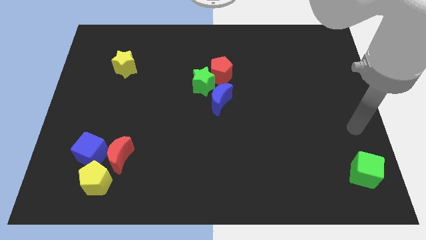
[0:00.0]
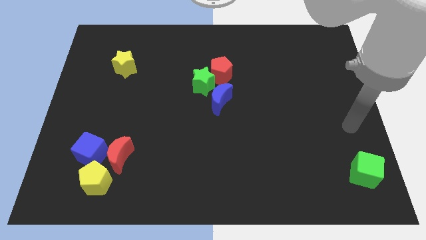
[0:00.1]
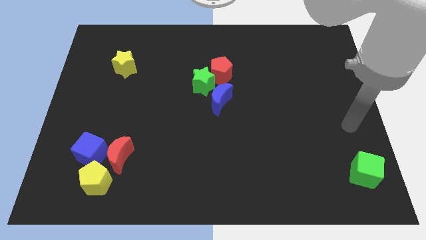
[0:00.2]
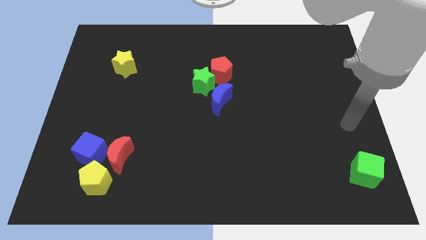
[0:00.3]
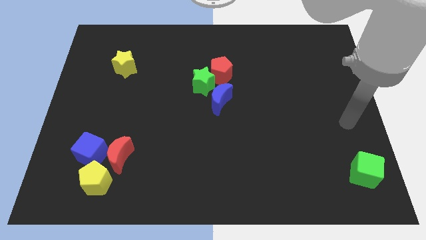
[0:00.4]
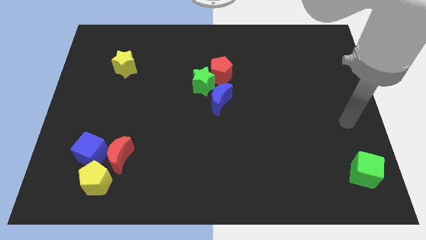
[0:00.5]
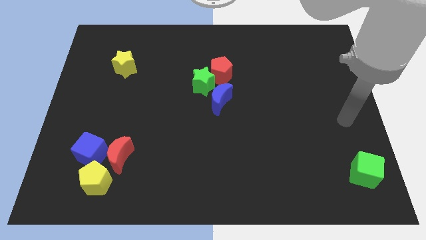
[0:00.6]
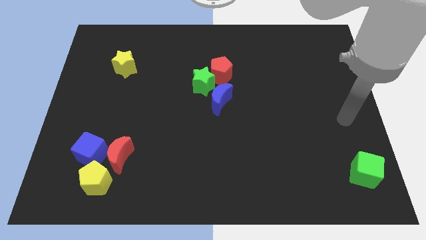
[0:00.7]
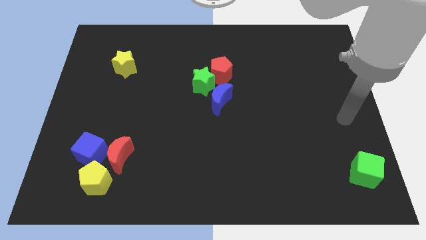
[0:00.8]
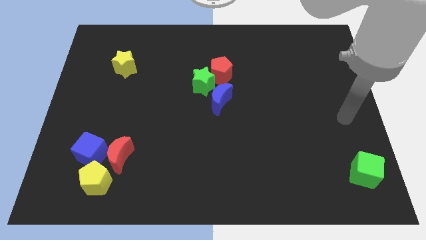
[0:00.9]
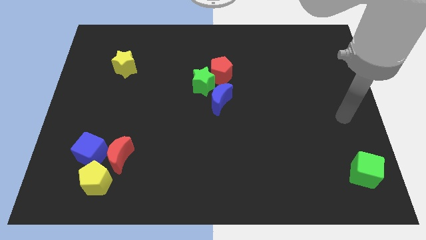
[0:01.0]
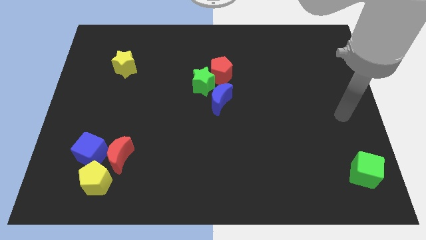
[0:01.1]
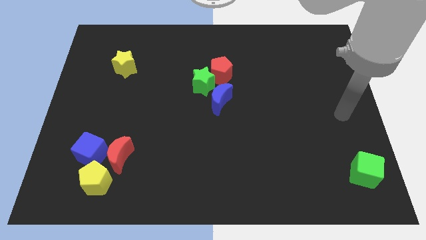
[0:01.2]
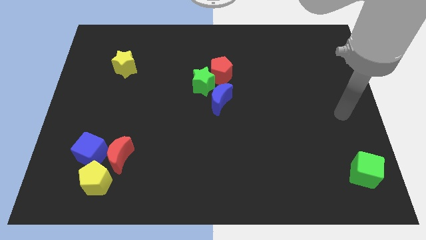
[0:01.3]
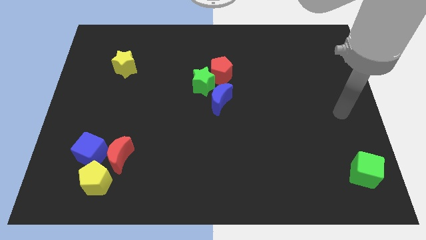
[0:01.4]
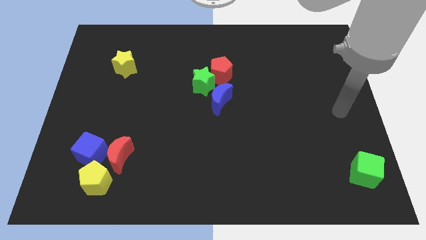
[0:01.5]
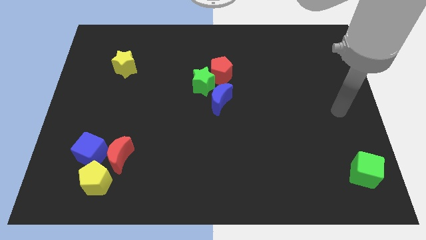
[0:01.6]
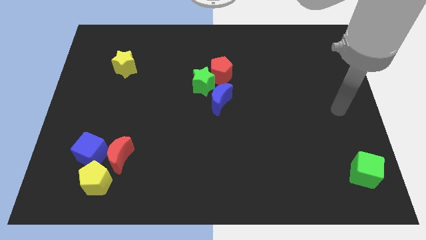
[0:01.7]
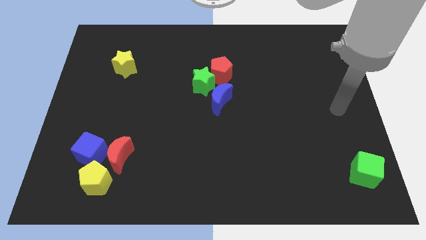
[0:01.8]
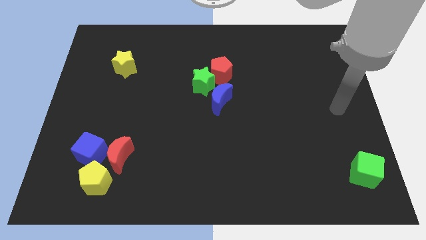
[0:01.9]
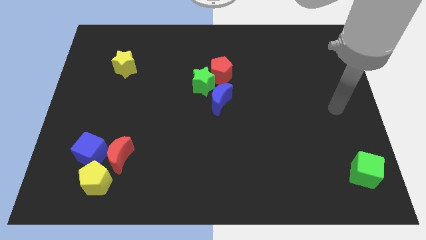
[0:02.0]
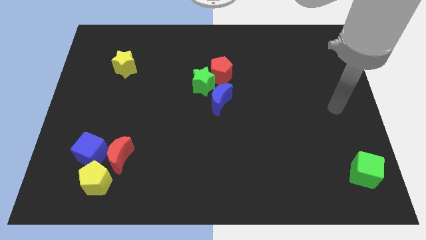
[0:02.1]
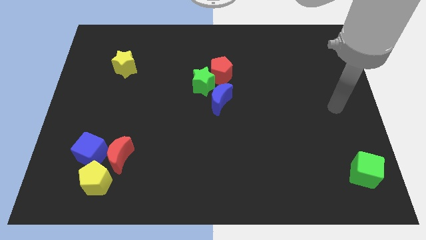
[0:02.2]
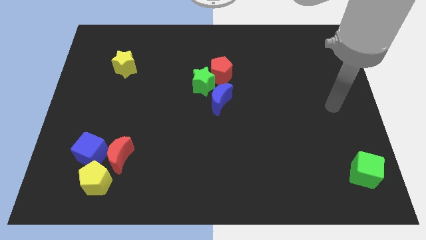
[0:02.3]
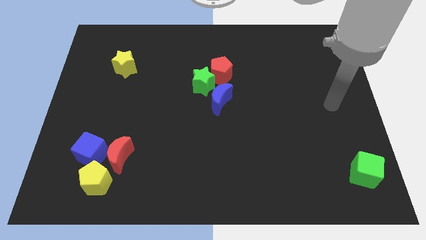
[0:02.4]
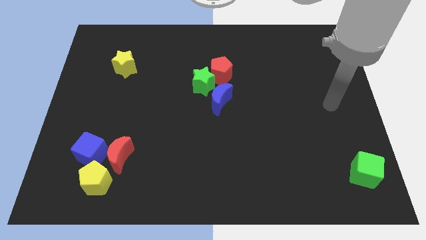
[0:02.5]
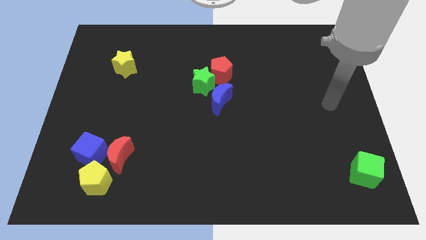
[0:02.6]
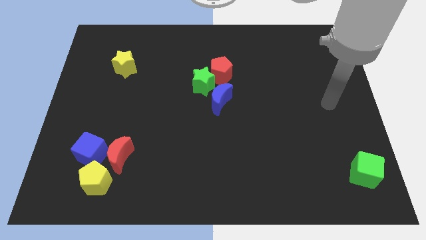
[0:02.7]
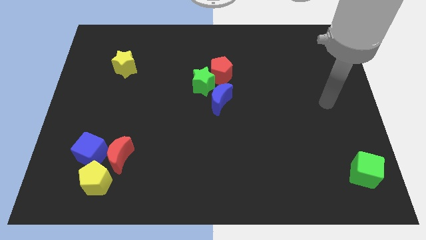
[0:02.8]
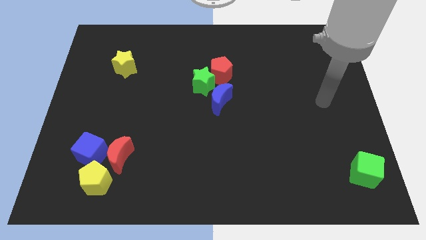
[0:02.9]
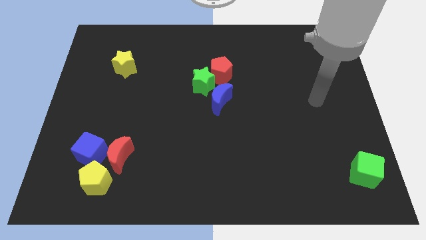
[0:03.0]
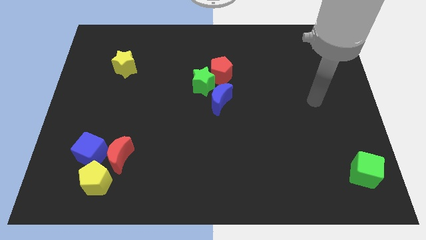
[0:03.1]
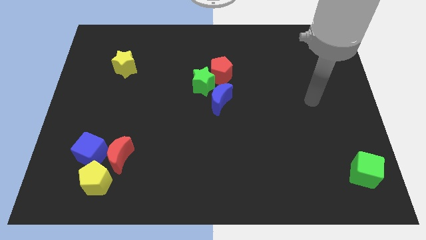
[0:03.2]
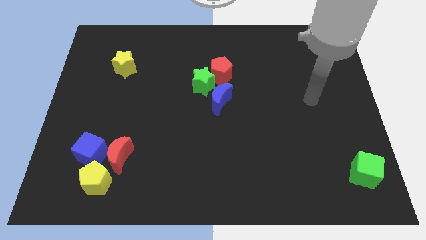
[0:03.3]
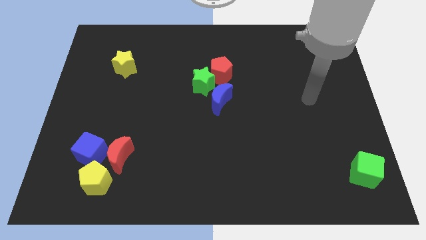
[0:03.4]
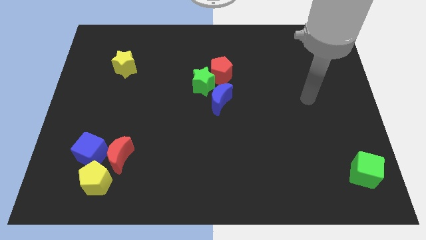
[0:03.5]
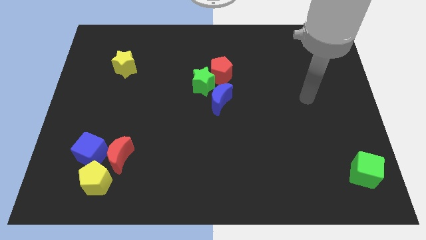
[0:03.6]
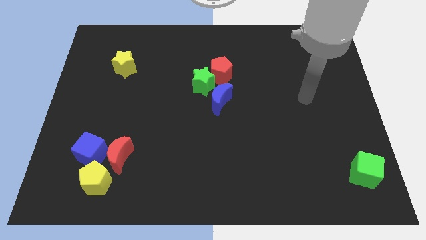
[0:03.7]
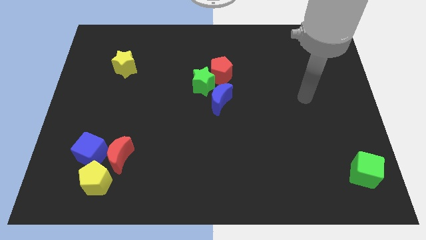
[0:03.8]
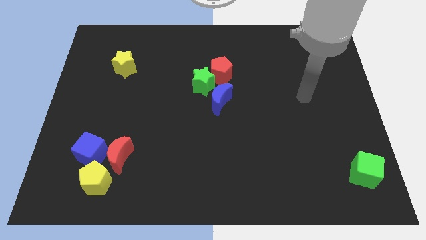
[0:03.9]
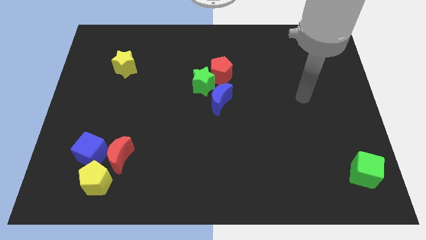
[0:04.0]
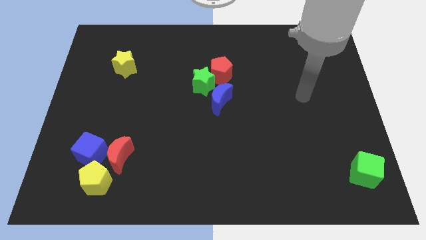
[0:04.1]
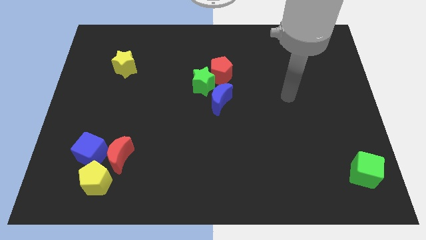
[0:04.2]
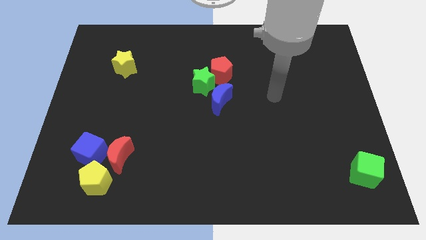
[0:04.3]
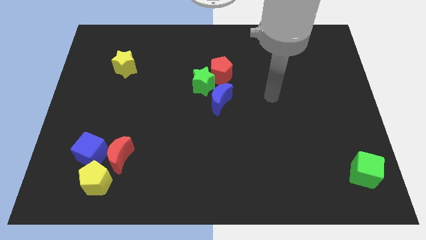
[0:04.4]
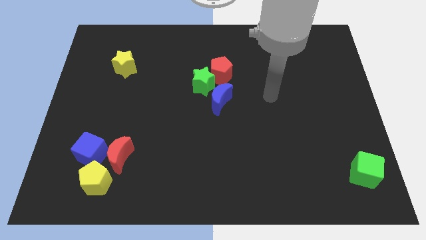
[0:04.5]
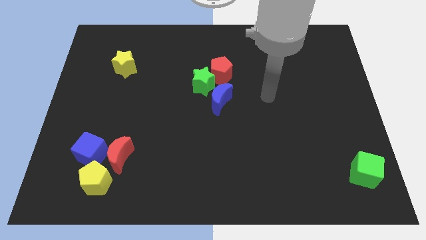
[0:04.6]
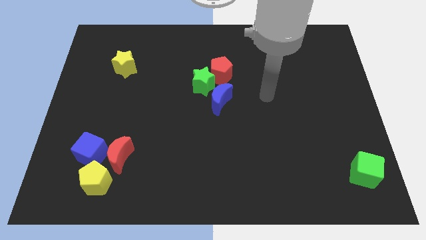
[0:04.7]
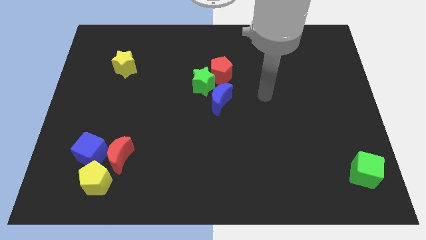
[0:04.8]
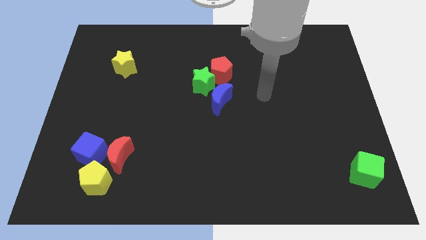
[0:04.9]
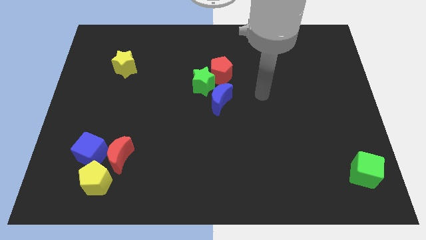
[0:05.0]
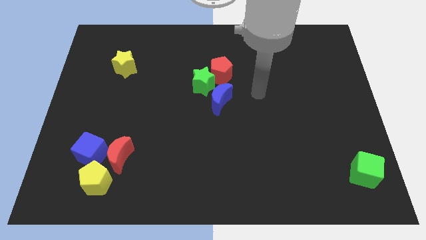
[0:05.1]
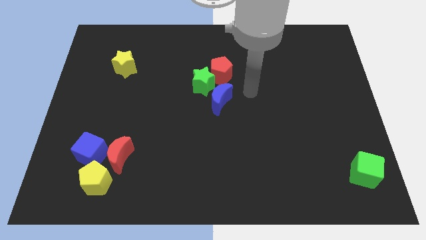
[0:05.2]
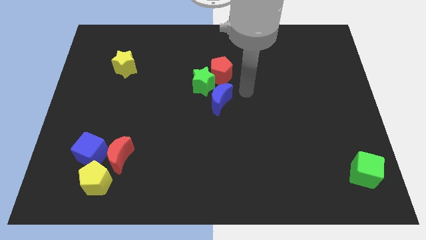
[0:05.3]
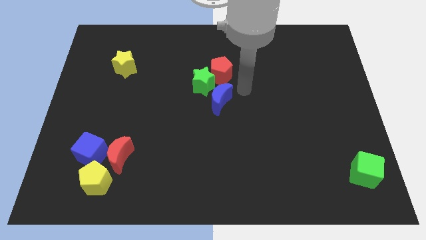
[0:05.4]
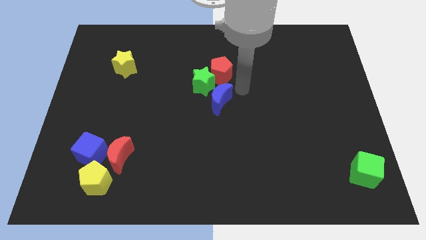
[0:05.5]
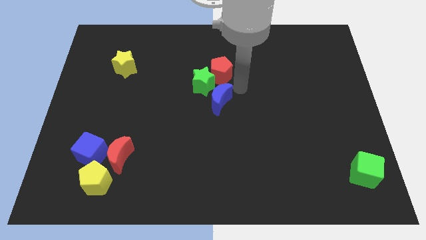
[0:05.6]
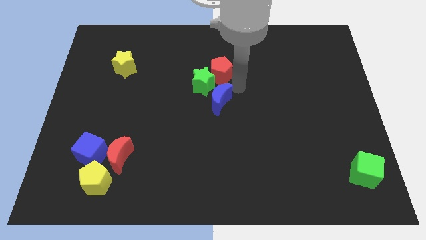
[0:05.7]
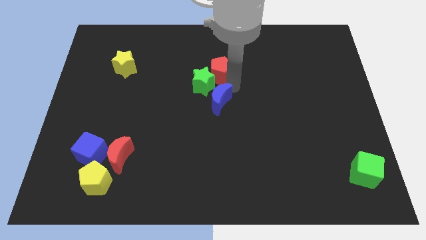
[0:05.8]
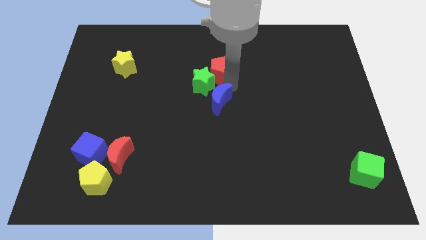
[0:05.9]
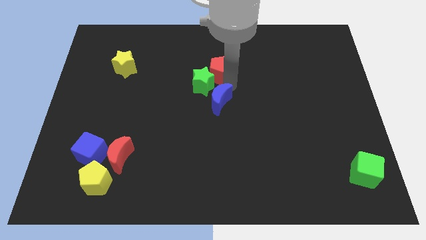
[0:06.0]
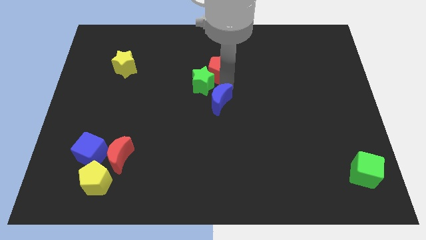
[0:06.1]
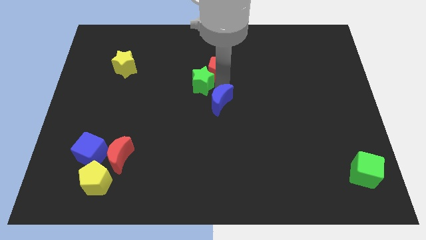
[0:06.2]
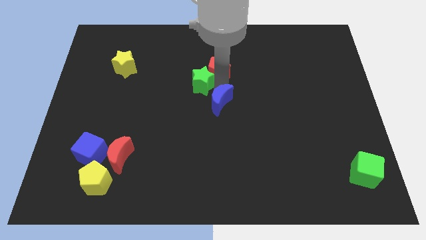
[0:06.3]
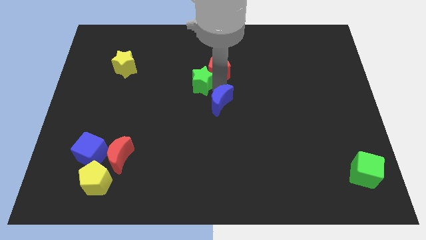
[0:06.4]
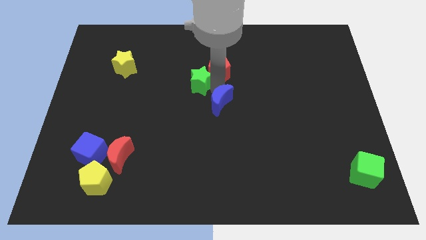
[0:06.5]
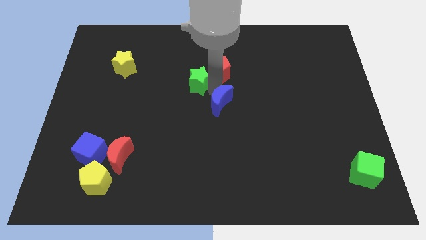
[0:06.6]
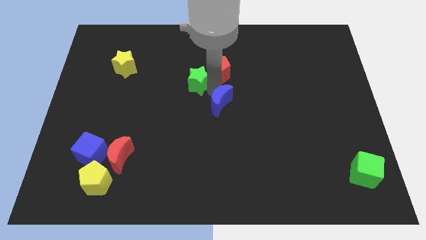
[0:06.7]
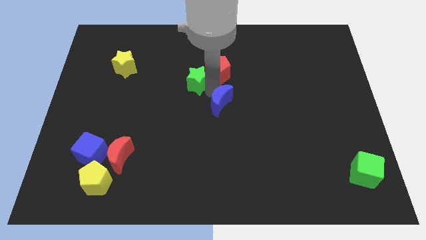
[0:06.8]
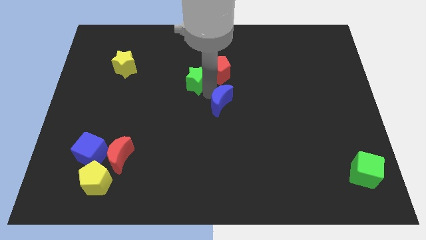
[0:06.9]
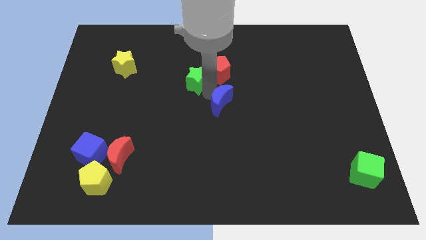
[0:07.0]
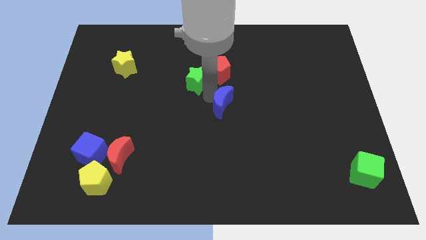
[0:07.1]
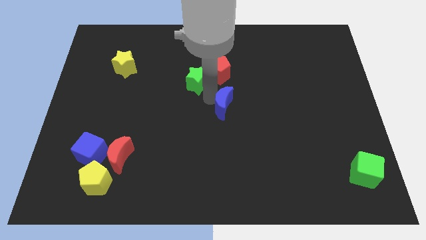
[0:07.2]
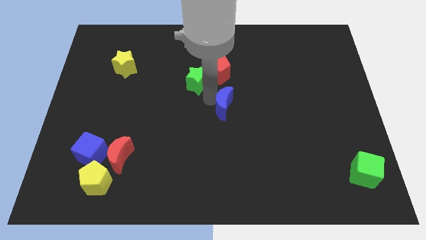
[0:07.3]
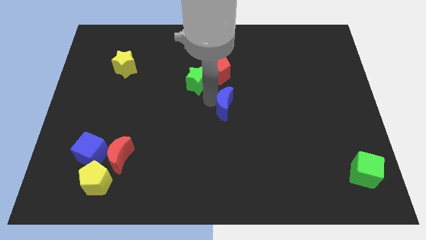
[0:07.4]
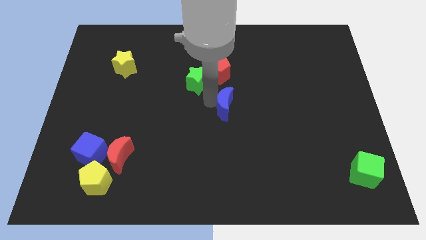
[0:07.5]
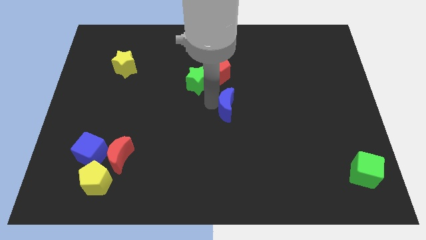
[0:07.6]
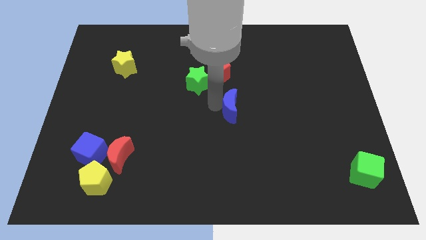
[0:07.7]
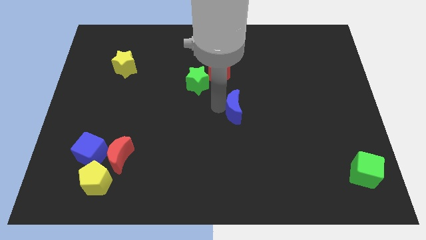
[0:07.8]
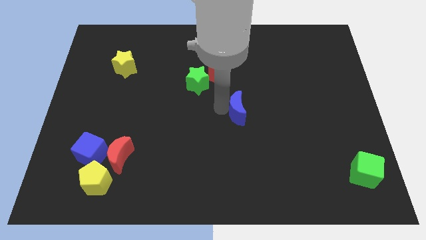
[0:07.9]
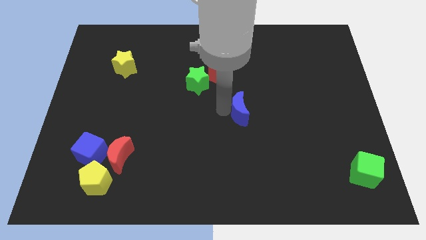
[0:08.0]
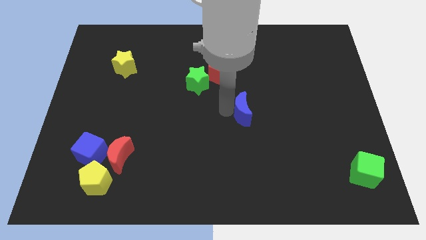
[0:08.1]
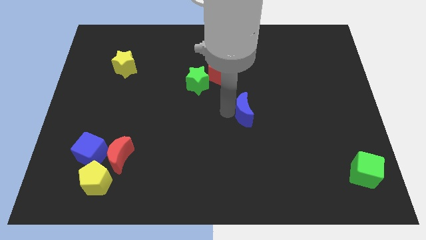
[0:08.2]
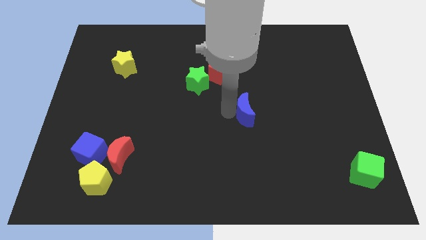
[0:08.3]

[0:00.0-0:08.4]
separate the blue crescent from the green star and the red pentagon

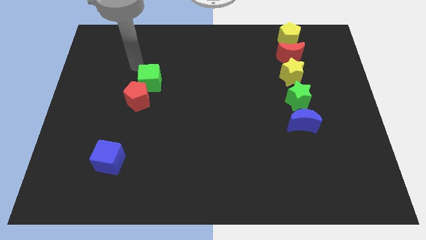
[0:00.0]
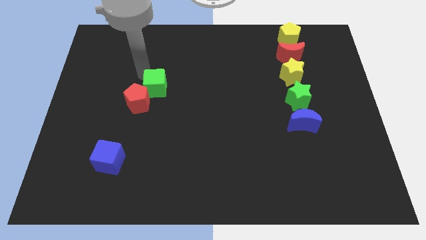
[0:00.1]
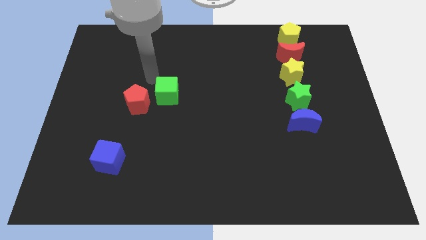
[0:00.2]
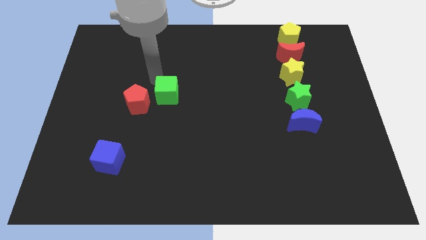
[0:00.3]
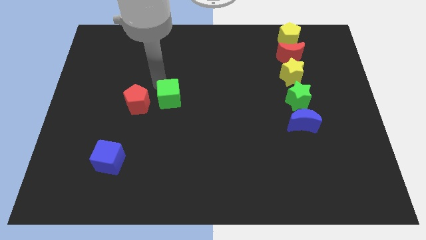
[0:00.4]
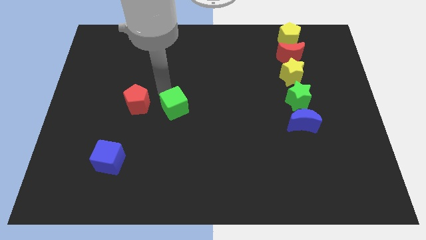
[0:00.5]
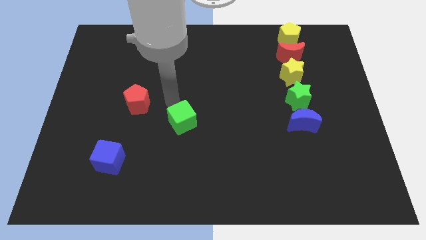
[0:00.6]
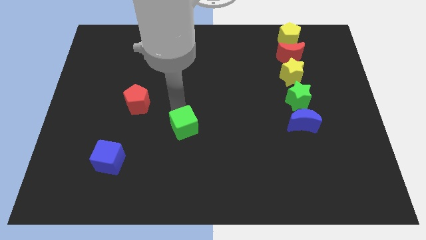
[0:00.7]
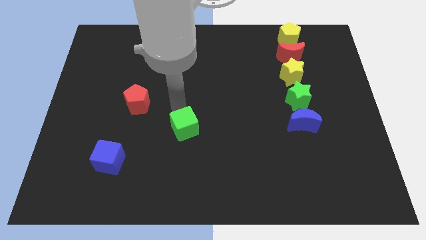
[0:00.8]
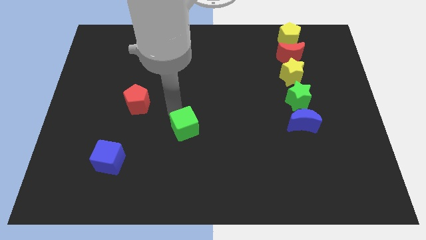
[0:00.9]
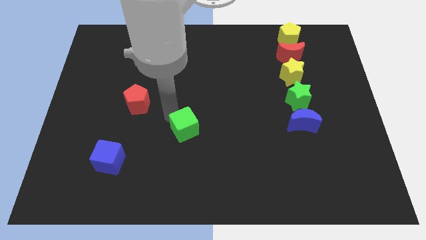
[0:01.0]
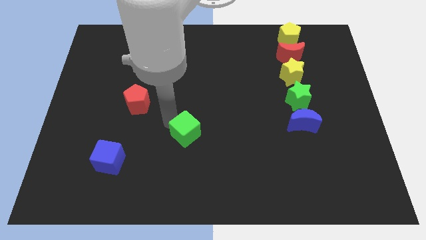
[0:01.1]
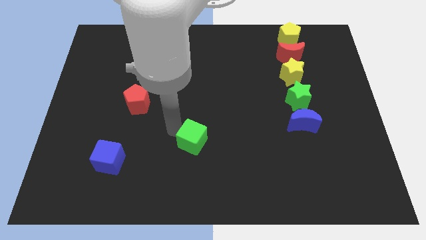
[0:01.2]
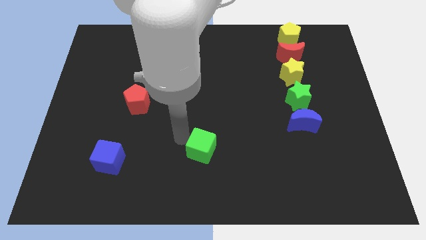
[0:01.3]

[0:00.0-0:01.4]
separate green cube from red pentagon
